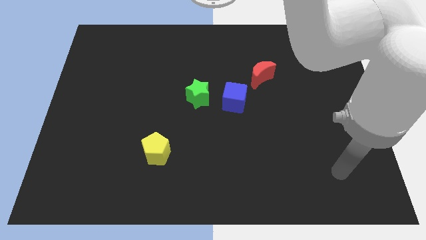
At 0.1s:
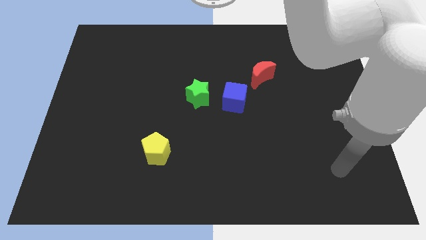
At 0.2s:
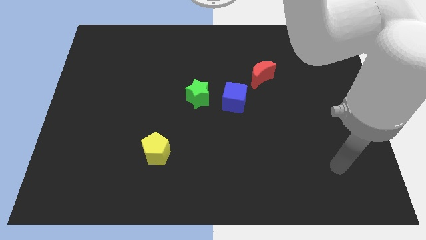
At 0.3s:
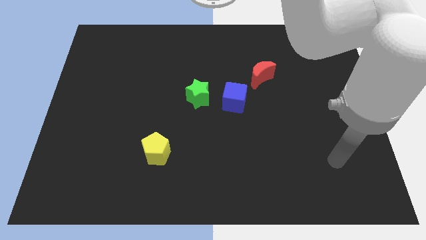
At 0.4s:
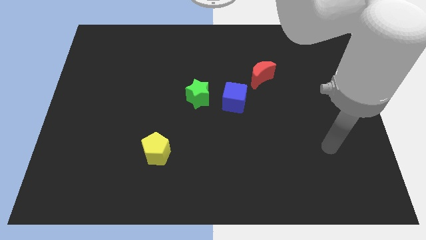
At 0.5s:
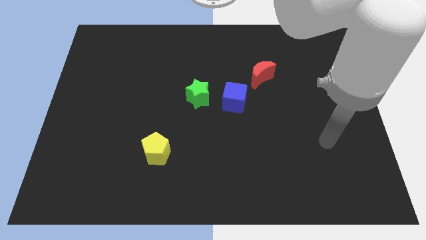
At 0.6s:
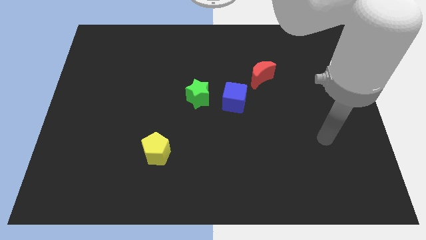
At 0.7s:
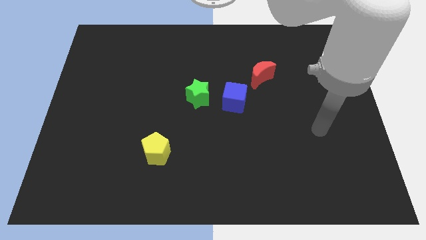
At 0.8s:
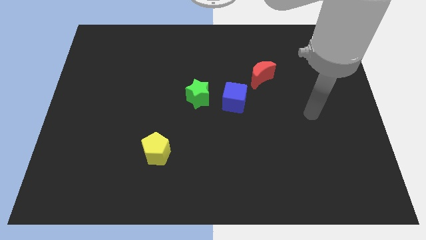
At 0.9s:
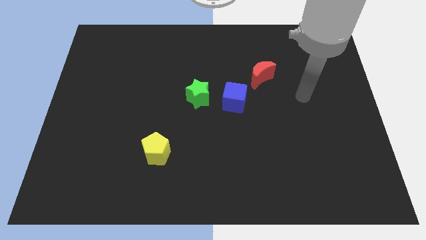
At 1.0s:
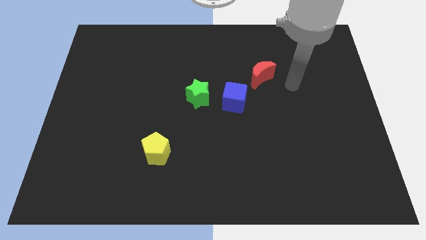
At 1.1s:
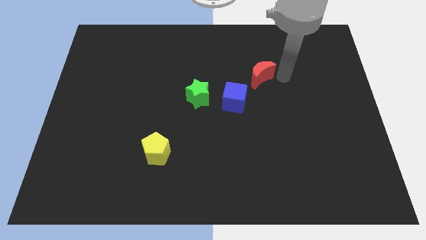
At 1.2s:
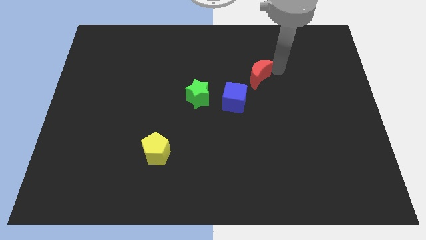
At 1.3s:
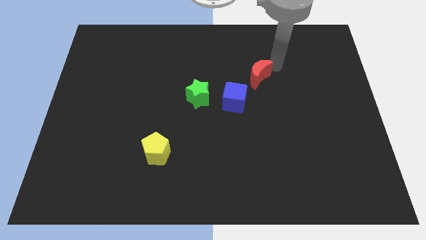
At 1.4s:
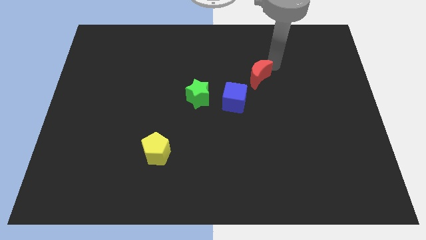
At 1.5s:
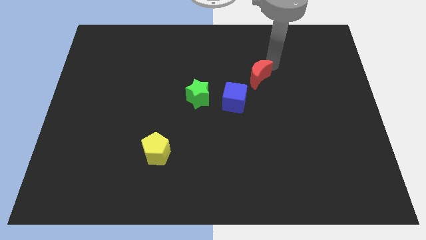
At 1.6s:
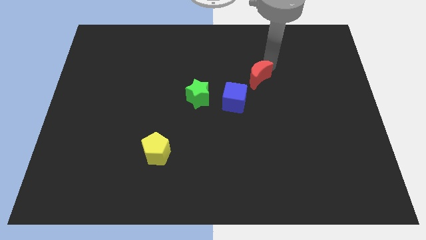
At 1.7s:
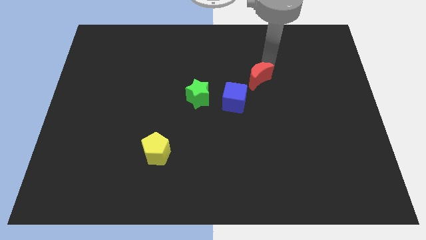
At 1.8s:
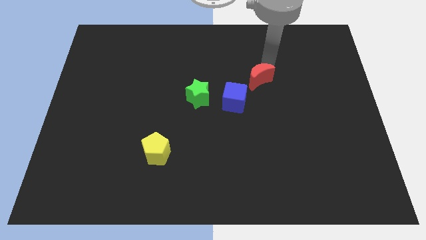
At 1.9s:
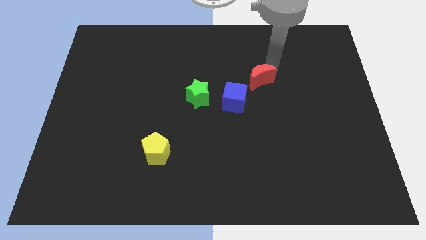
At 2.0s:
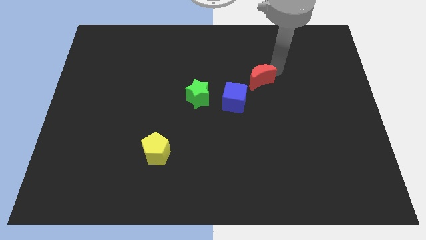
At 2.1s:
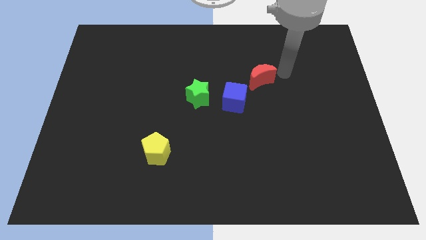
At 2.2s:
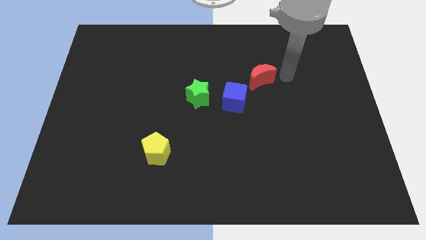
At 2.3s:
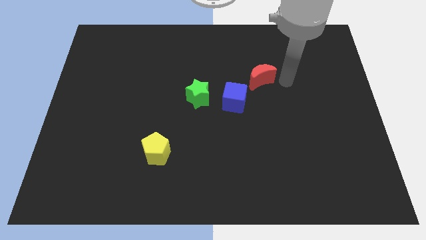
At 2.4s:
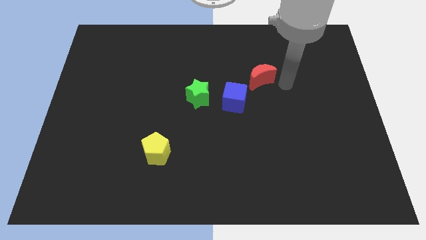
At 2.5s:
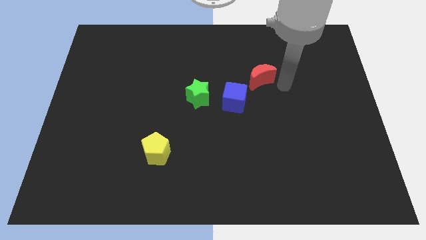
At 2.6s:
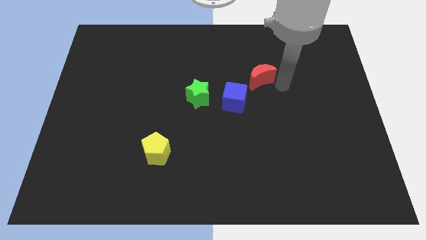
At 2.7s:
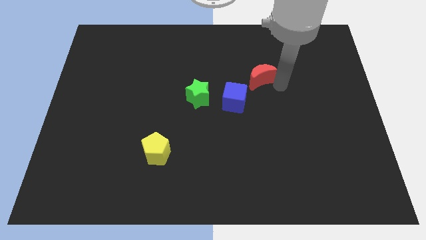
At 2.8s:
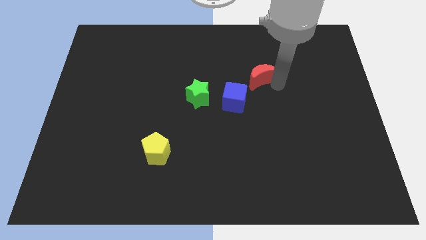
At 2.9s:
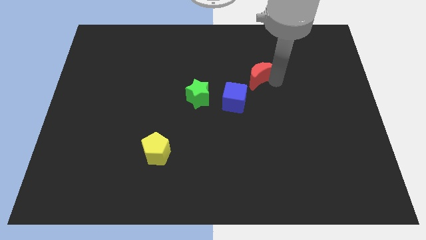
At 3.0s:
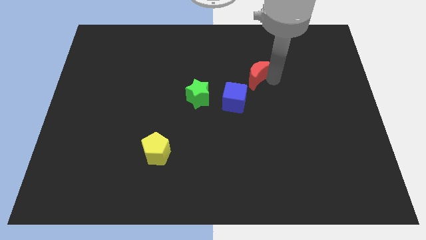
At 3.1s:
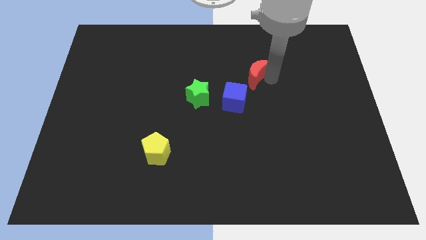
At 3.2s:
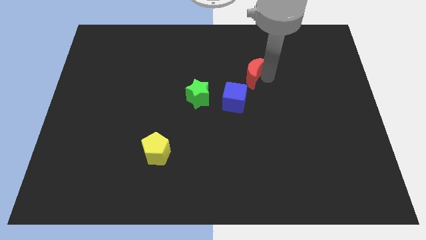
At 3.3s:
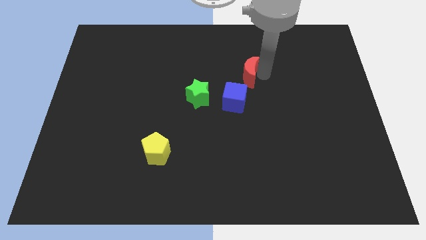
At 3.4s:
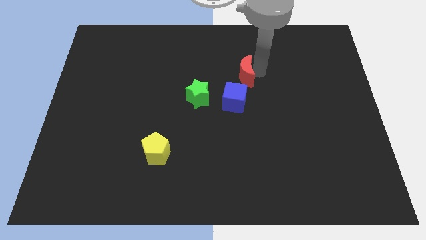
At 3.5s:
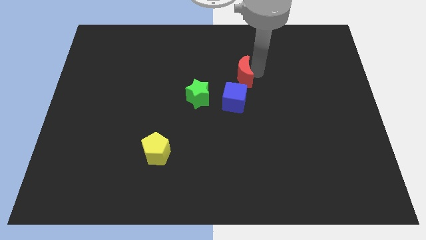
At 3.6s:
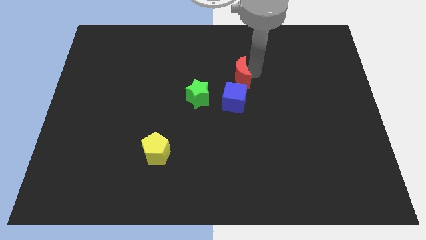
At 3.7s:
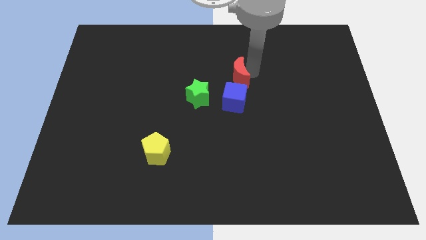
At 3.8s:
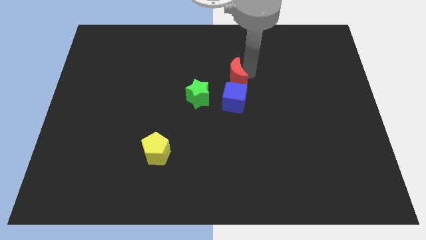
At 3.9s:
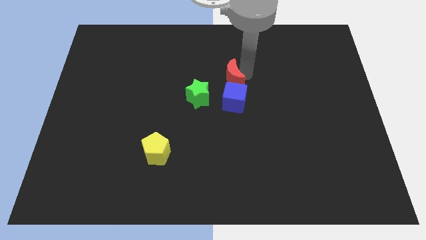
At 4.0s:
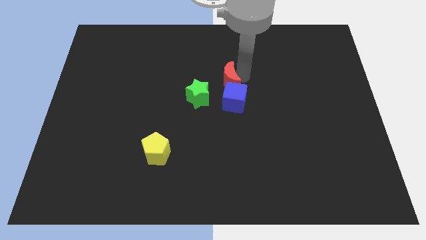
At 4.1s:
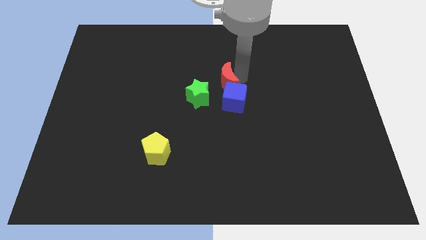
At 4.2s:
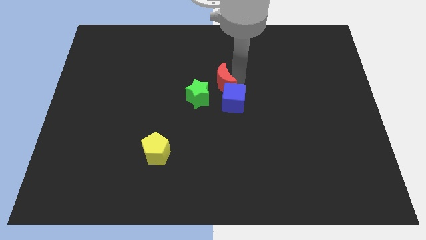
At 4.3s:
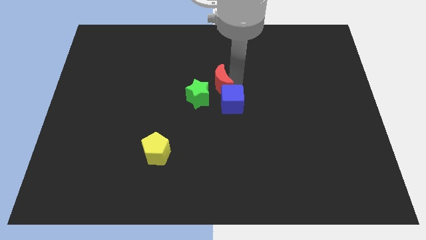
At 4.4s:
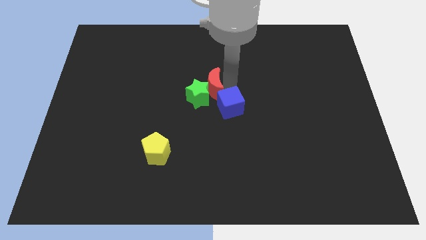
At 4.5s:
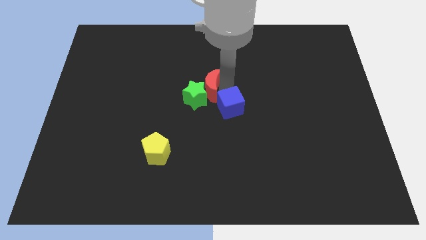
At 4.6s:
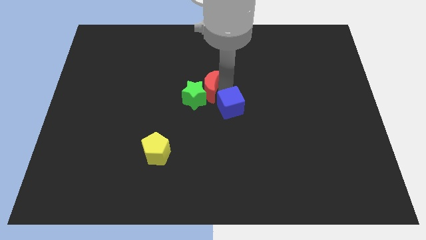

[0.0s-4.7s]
move the red moon close to the star

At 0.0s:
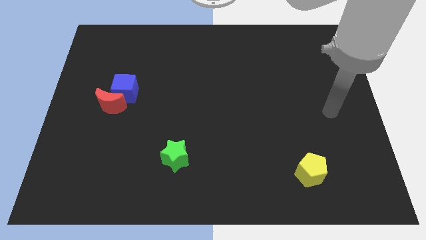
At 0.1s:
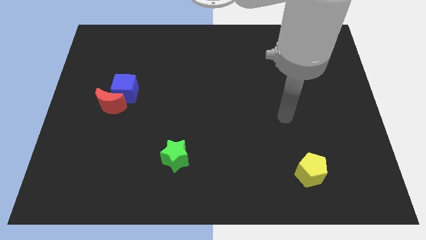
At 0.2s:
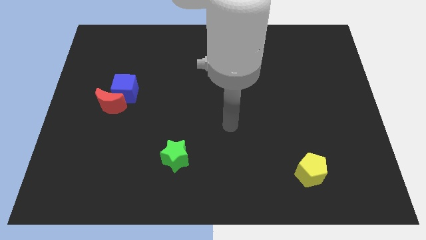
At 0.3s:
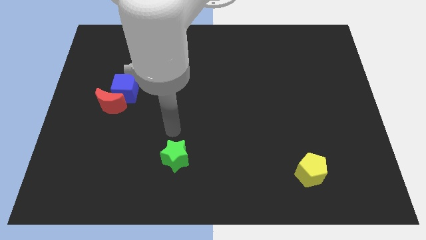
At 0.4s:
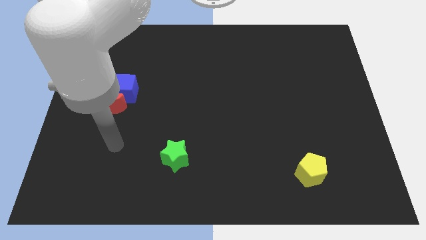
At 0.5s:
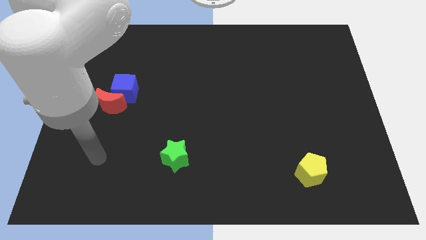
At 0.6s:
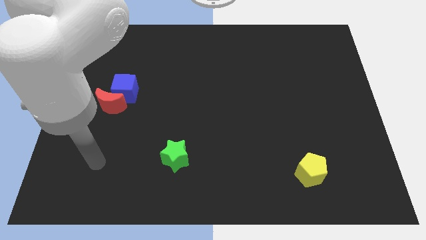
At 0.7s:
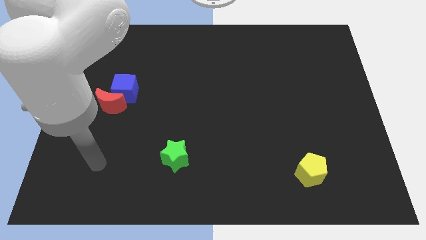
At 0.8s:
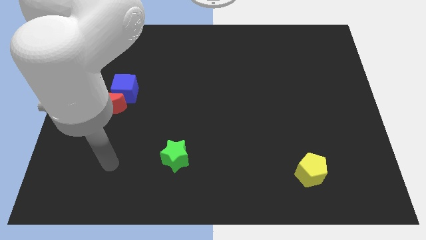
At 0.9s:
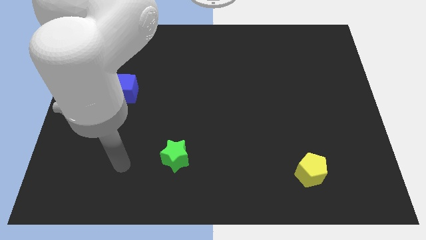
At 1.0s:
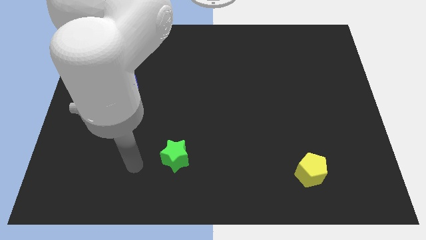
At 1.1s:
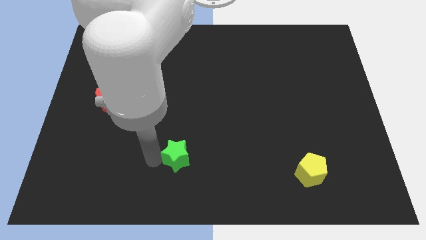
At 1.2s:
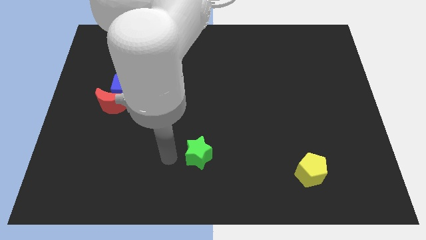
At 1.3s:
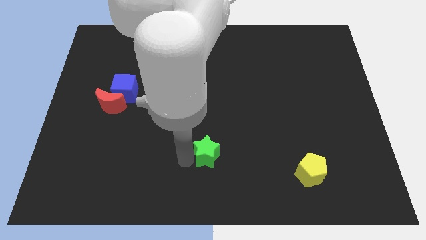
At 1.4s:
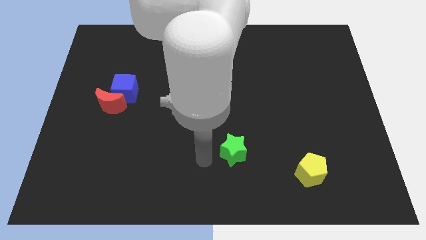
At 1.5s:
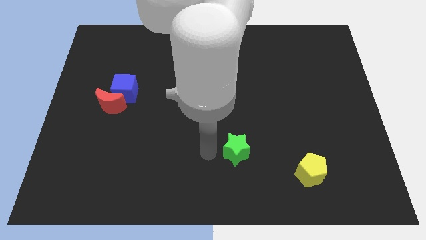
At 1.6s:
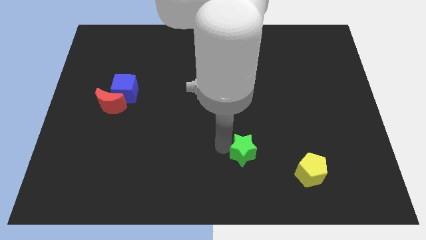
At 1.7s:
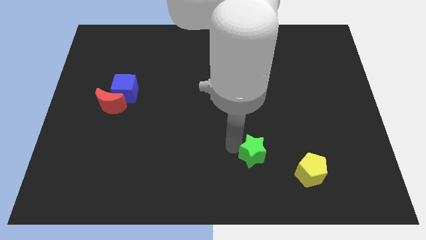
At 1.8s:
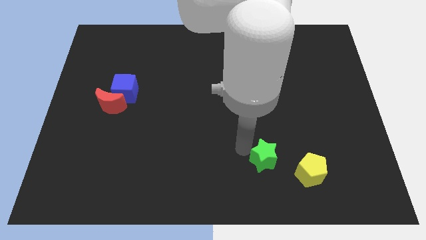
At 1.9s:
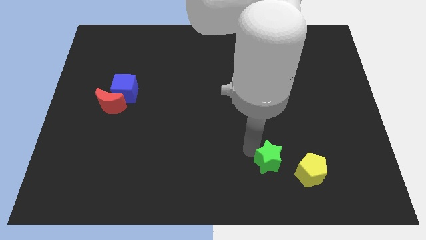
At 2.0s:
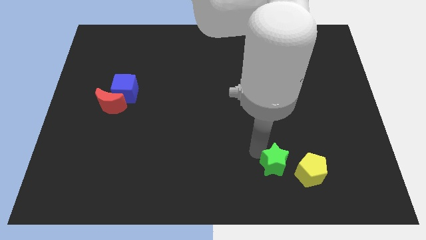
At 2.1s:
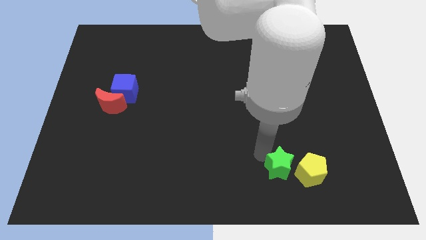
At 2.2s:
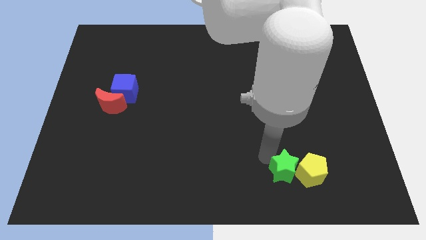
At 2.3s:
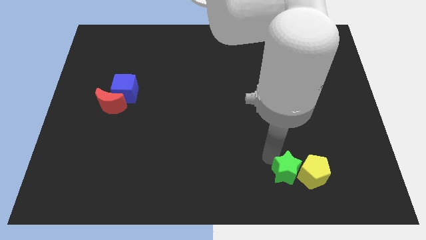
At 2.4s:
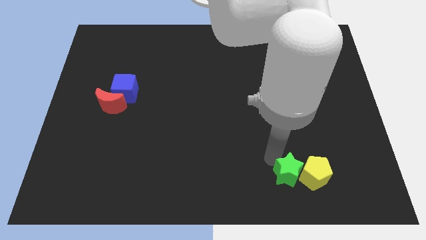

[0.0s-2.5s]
put the green block towards the pentagon

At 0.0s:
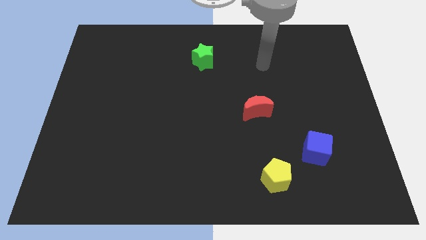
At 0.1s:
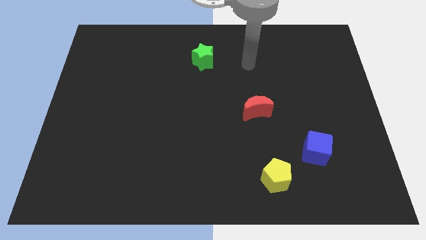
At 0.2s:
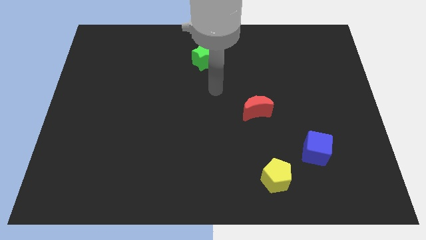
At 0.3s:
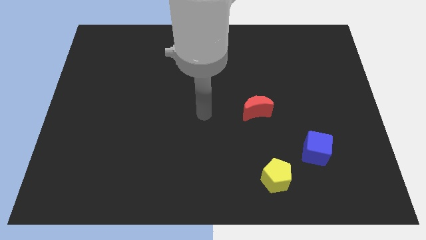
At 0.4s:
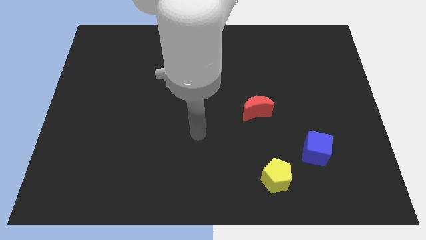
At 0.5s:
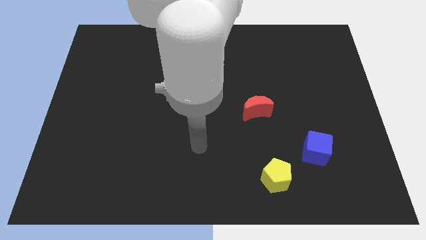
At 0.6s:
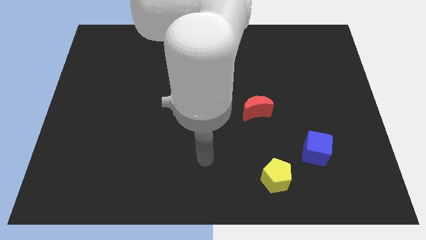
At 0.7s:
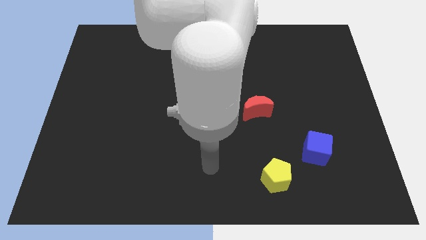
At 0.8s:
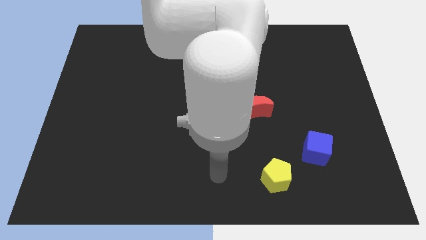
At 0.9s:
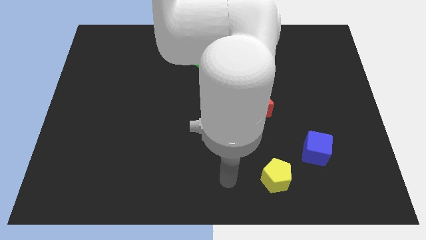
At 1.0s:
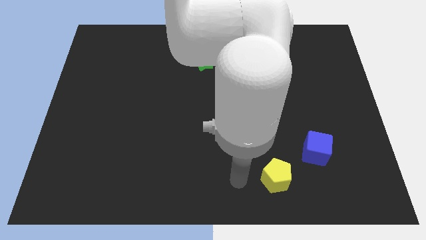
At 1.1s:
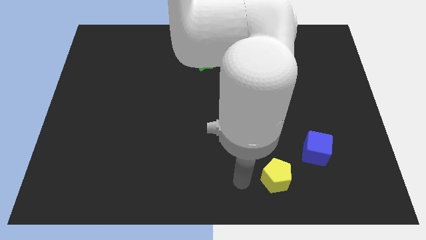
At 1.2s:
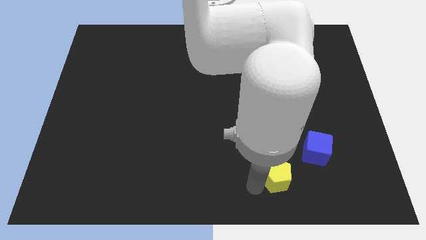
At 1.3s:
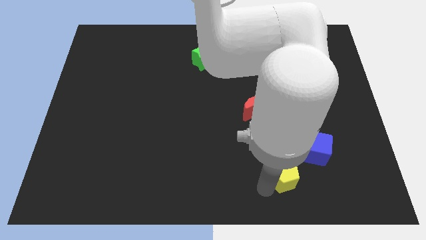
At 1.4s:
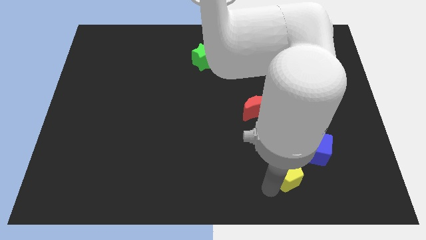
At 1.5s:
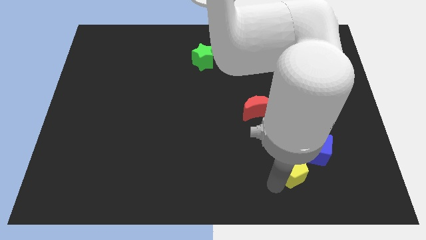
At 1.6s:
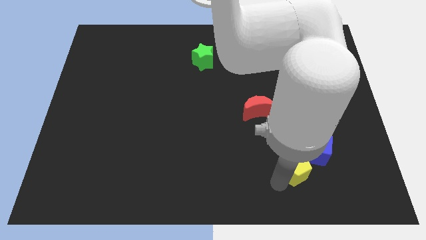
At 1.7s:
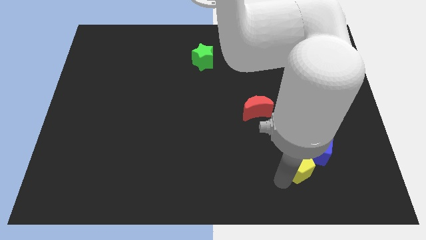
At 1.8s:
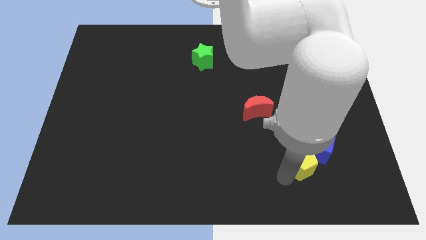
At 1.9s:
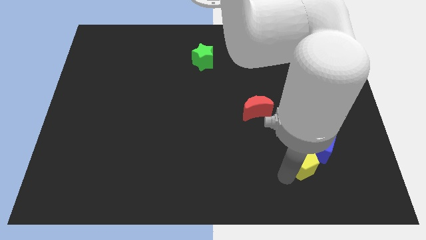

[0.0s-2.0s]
slide the yellow pentagon close to the cube
